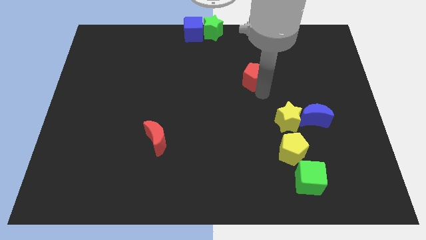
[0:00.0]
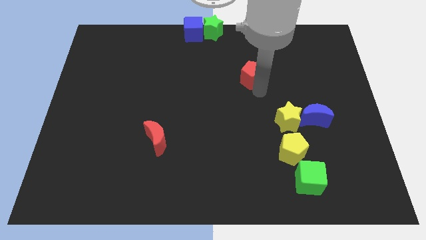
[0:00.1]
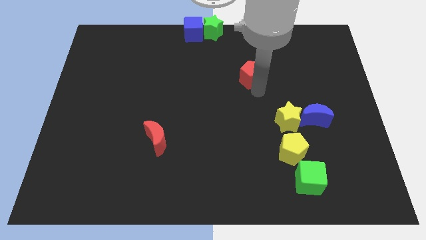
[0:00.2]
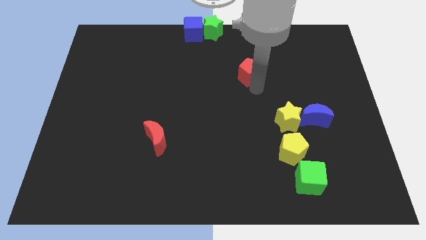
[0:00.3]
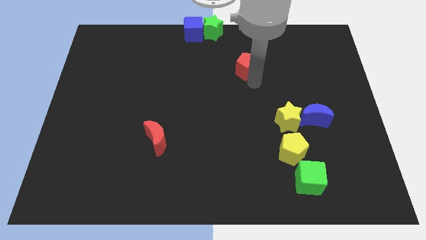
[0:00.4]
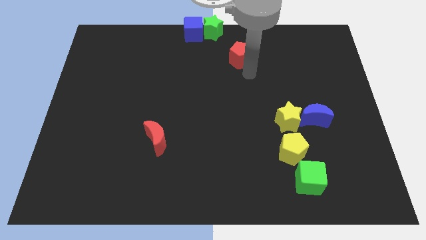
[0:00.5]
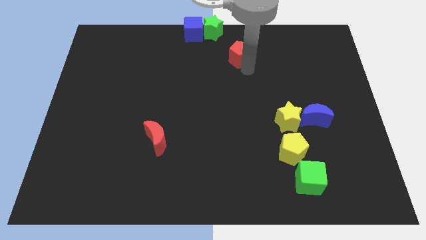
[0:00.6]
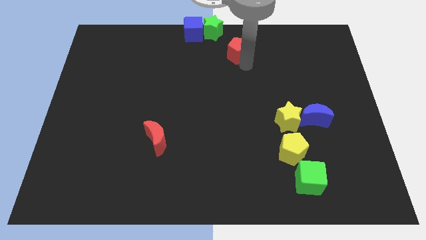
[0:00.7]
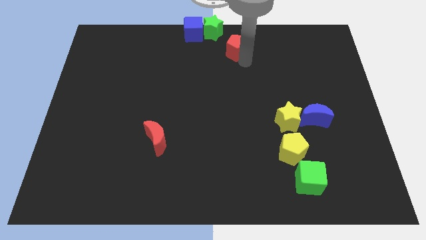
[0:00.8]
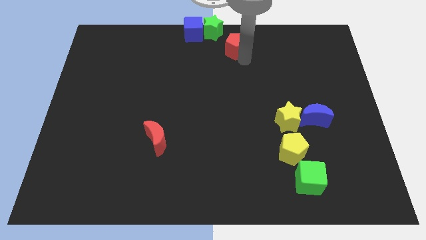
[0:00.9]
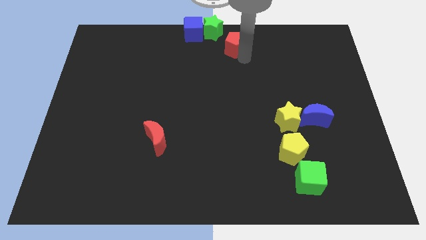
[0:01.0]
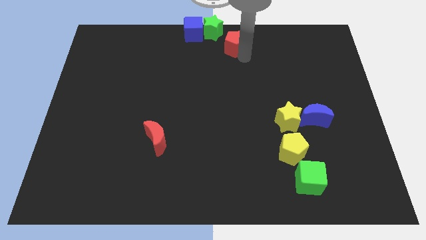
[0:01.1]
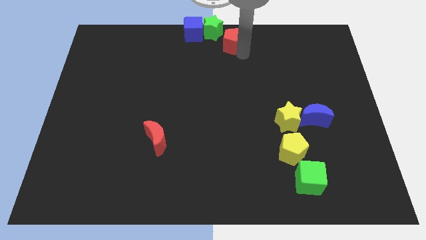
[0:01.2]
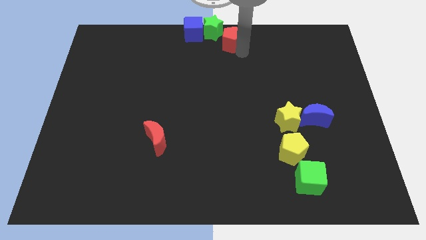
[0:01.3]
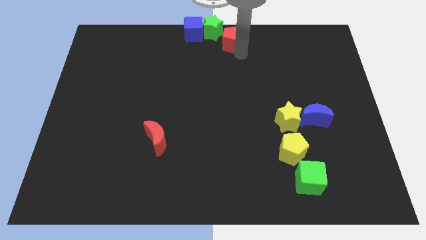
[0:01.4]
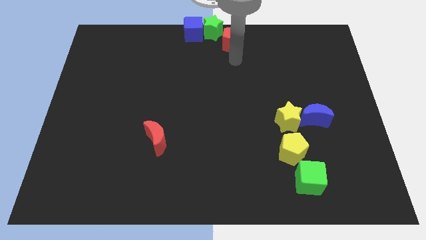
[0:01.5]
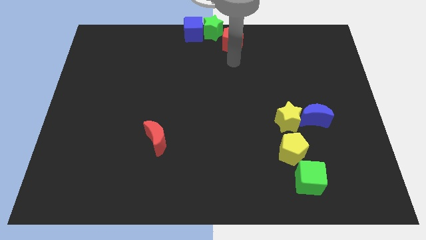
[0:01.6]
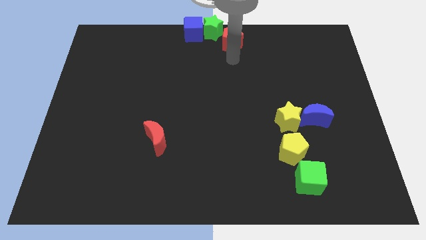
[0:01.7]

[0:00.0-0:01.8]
push the red pentagon towards the top center of the board

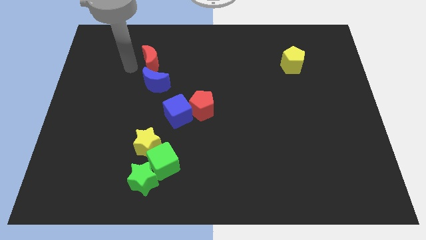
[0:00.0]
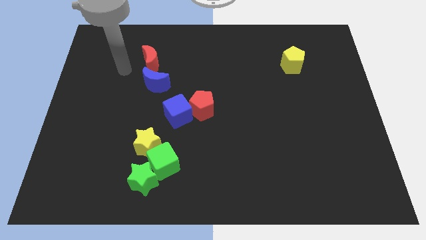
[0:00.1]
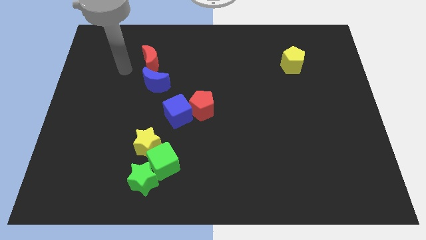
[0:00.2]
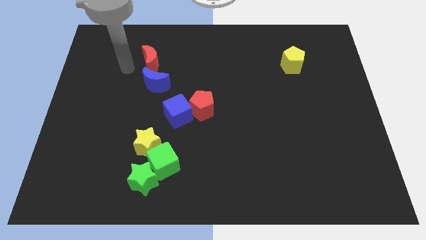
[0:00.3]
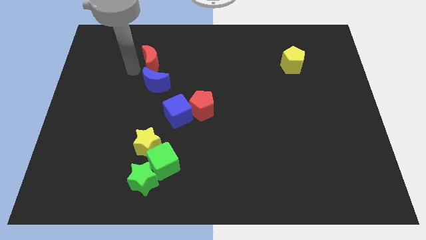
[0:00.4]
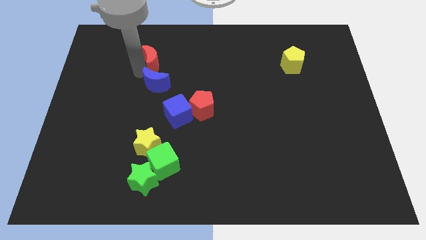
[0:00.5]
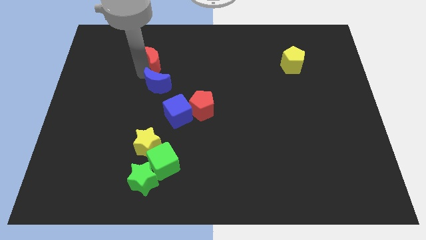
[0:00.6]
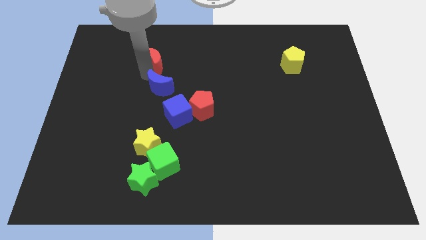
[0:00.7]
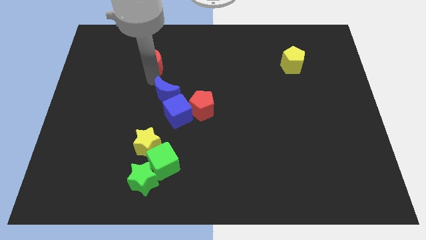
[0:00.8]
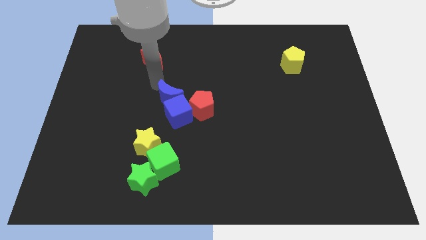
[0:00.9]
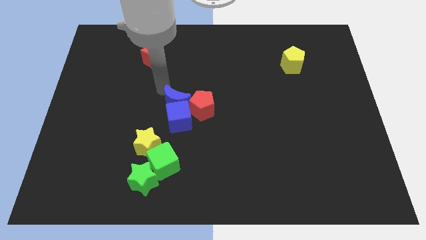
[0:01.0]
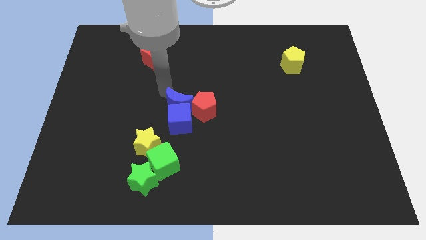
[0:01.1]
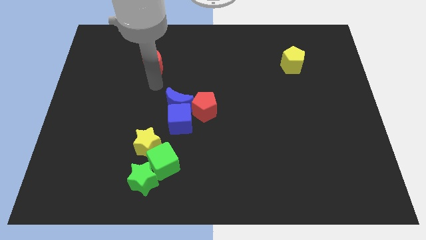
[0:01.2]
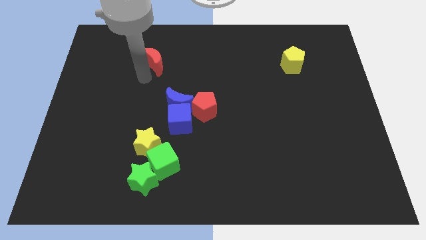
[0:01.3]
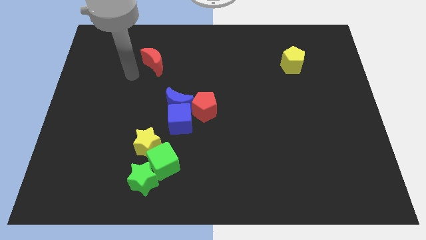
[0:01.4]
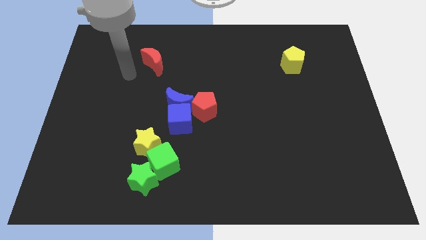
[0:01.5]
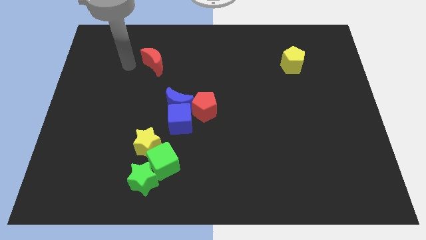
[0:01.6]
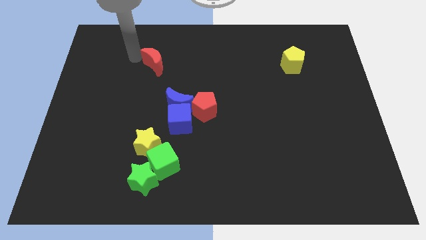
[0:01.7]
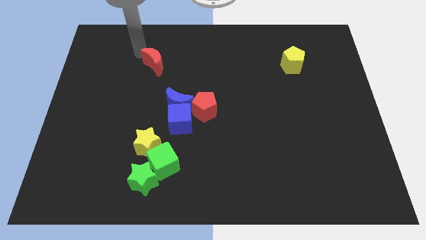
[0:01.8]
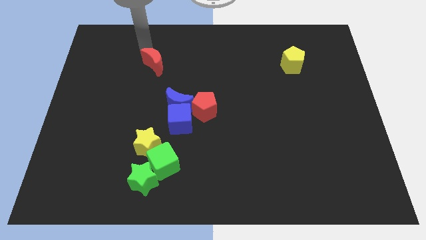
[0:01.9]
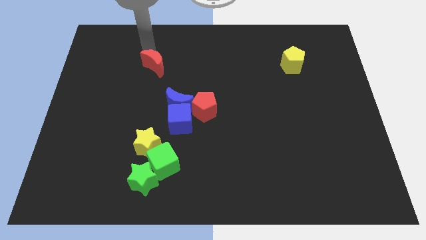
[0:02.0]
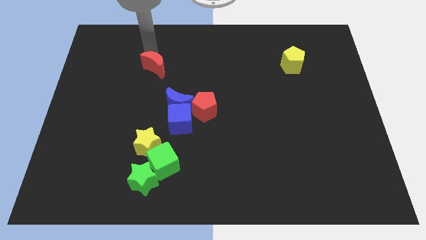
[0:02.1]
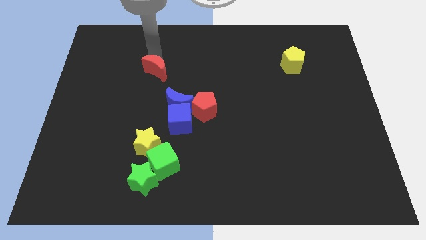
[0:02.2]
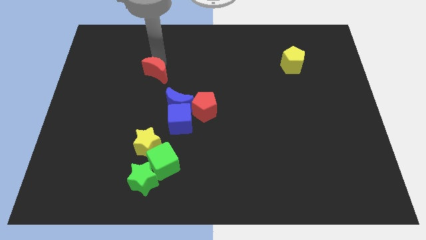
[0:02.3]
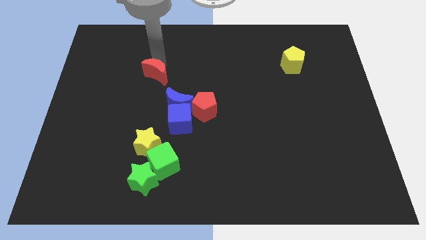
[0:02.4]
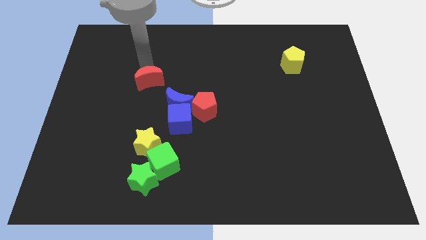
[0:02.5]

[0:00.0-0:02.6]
separate blue moon from blue crescent

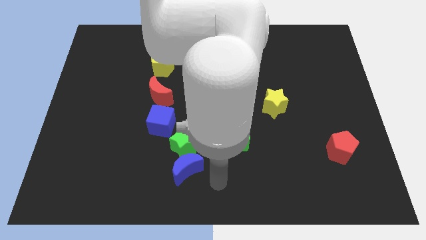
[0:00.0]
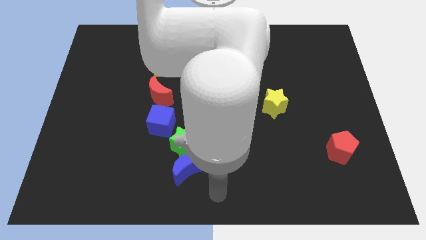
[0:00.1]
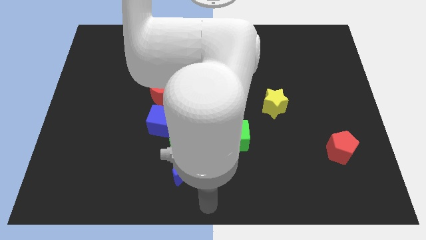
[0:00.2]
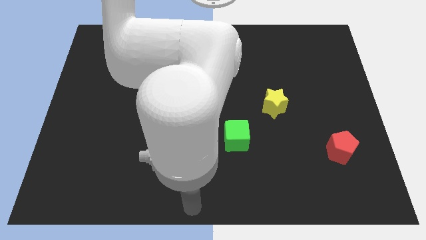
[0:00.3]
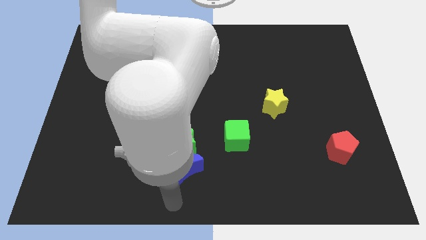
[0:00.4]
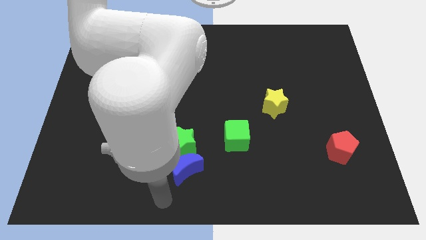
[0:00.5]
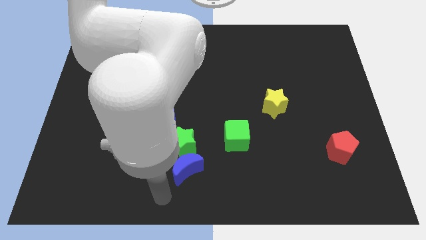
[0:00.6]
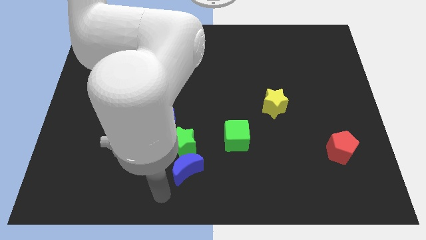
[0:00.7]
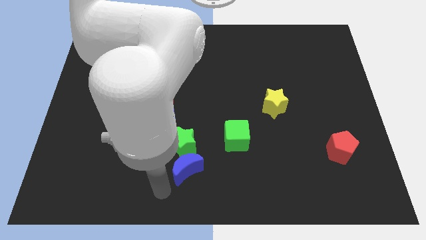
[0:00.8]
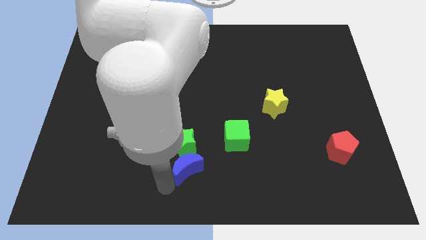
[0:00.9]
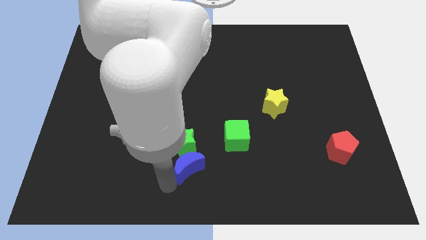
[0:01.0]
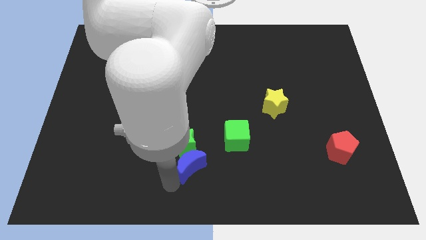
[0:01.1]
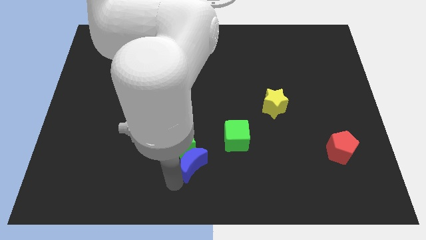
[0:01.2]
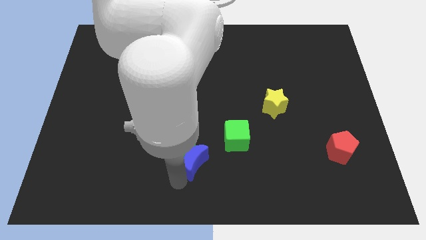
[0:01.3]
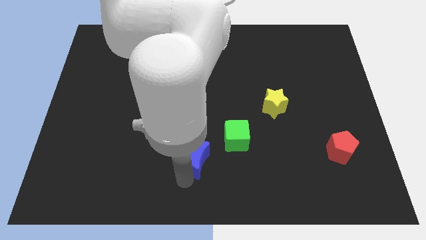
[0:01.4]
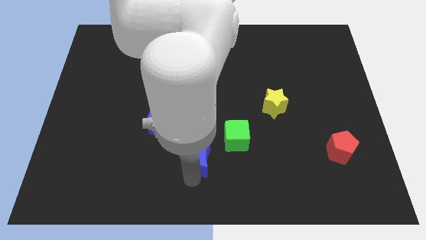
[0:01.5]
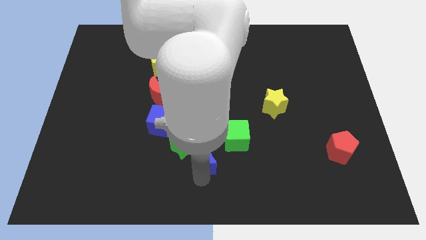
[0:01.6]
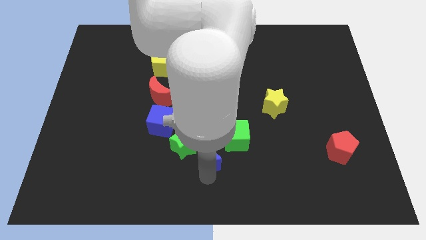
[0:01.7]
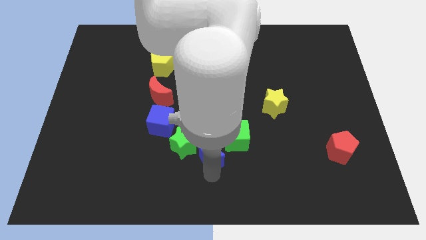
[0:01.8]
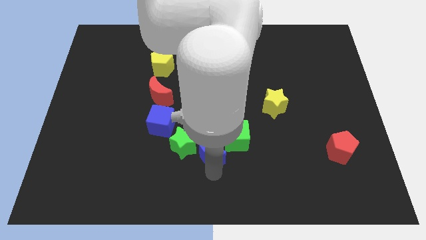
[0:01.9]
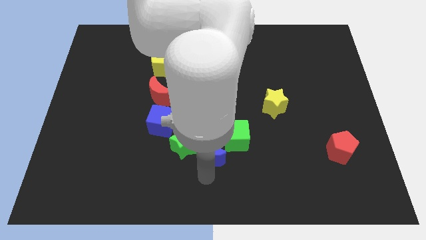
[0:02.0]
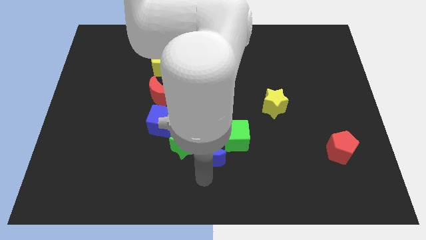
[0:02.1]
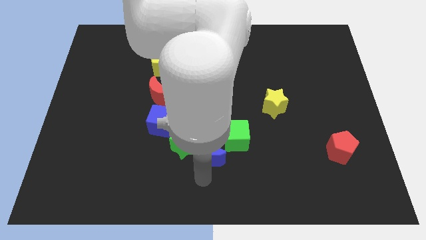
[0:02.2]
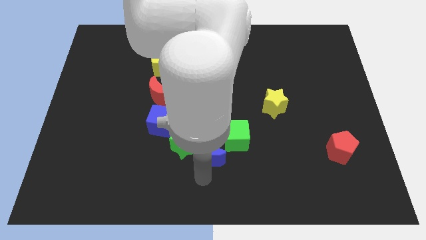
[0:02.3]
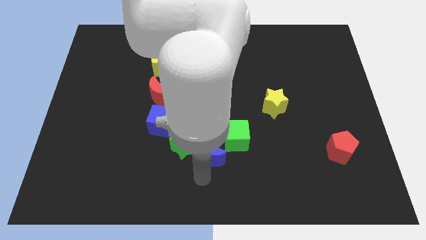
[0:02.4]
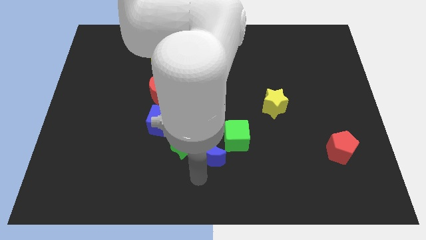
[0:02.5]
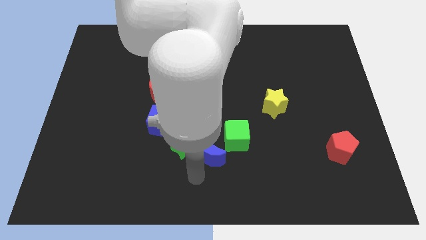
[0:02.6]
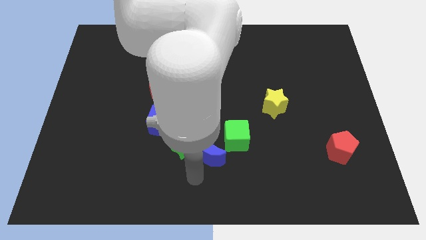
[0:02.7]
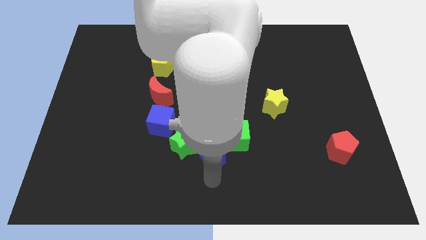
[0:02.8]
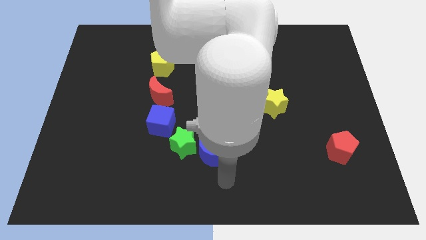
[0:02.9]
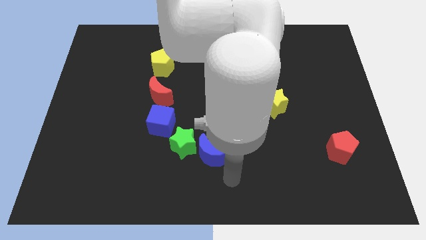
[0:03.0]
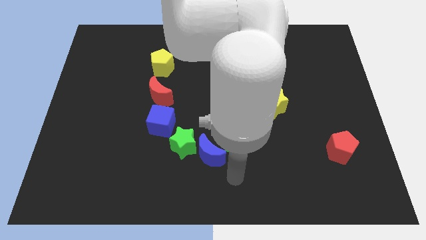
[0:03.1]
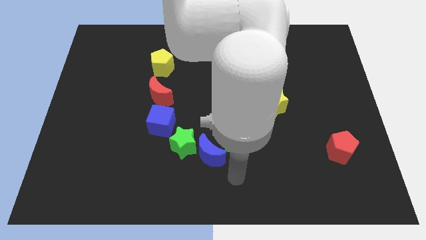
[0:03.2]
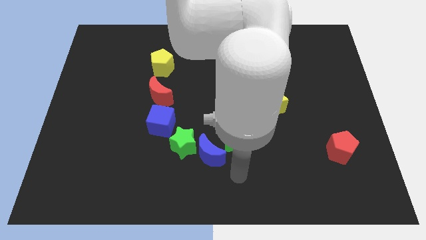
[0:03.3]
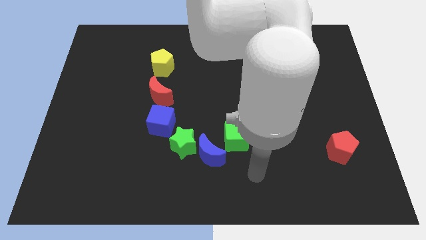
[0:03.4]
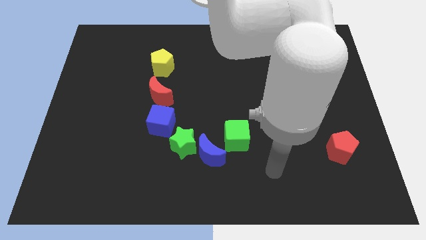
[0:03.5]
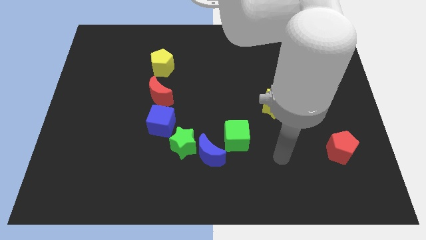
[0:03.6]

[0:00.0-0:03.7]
place the blue moon in between the green star and green cube

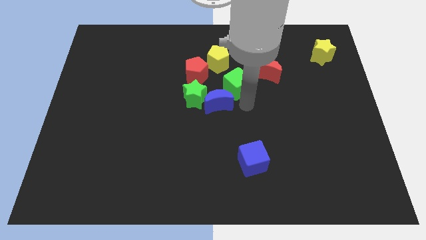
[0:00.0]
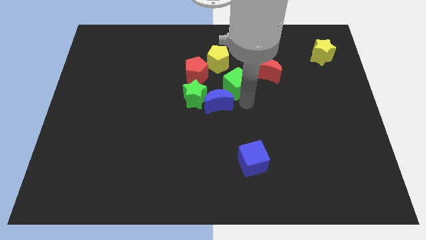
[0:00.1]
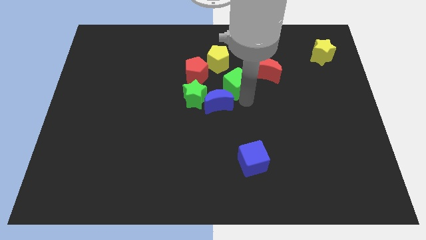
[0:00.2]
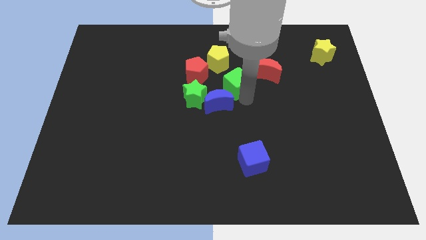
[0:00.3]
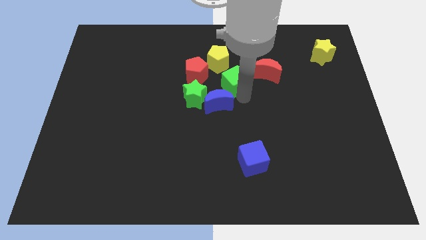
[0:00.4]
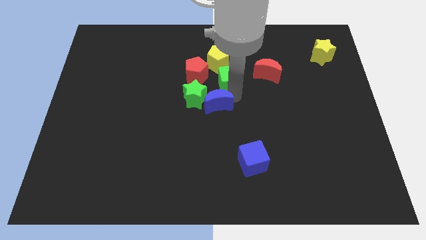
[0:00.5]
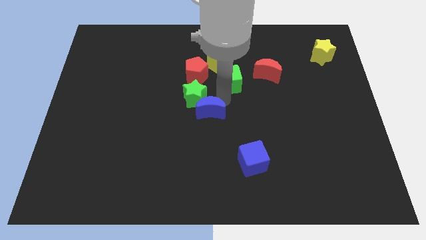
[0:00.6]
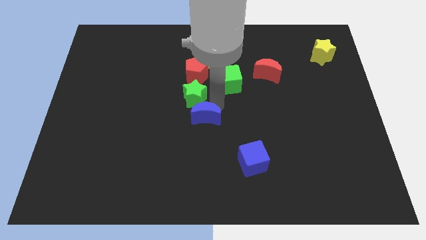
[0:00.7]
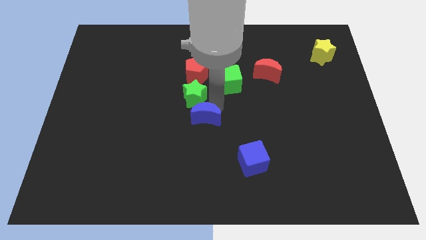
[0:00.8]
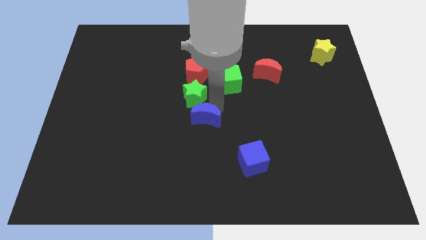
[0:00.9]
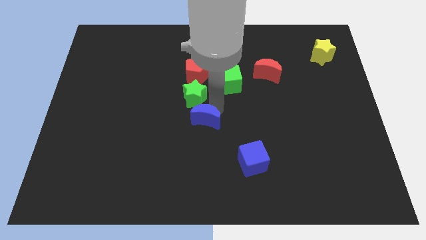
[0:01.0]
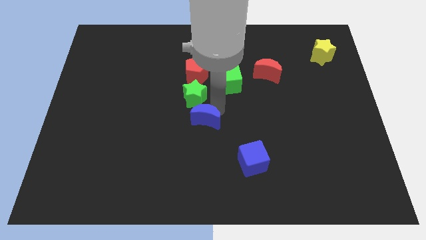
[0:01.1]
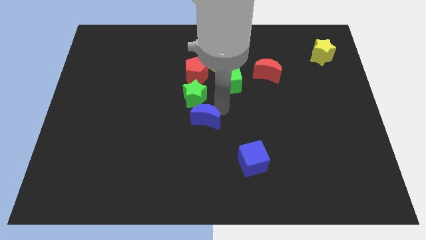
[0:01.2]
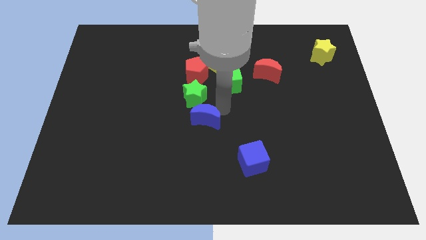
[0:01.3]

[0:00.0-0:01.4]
push the blue crescent away from the green cube
